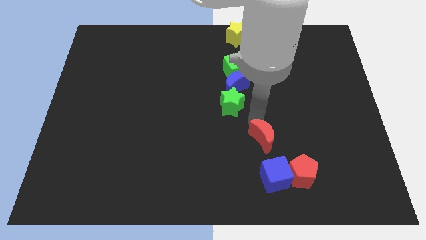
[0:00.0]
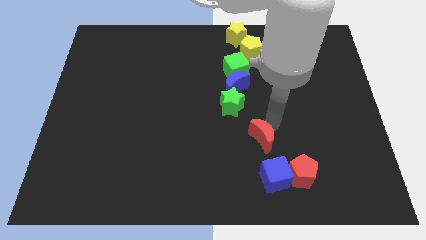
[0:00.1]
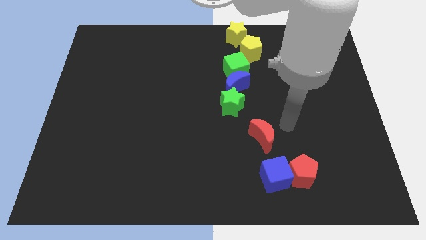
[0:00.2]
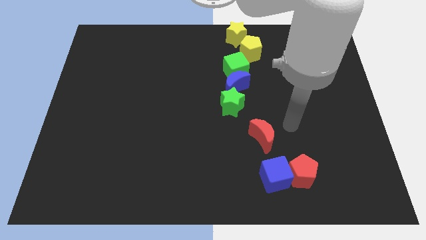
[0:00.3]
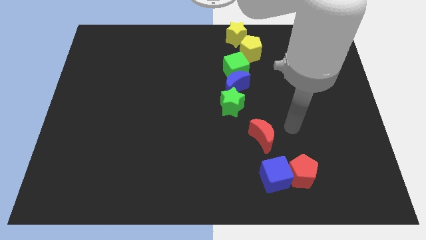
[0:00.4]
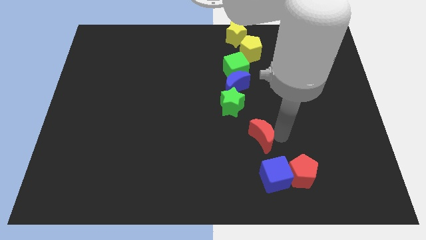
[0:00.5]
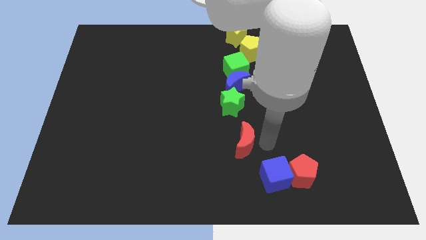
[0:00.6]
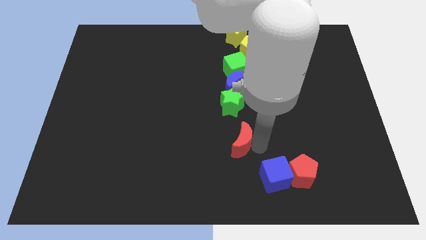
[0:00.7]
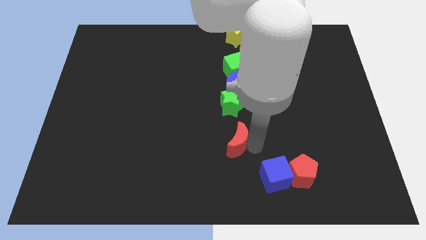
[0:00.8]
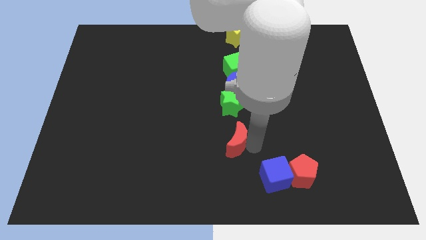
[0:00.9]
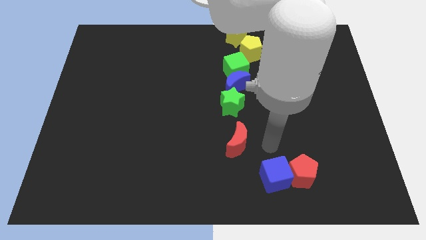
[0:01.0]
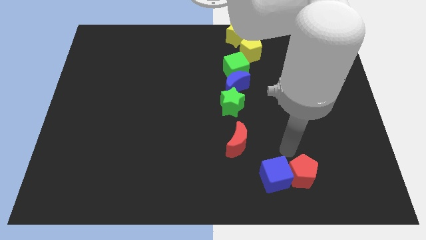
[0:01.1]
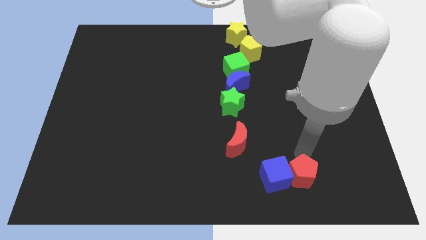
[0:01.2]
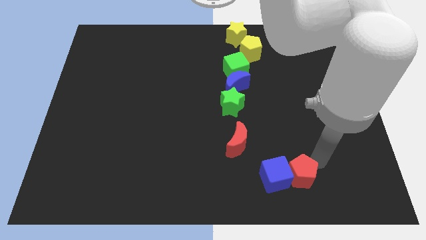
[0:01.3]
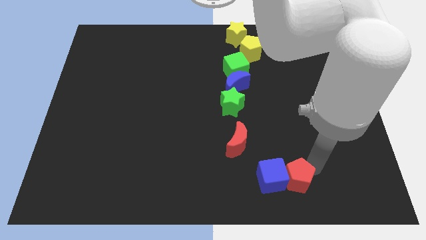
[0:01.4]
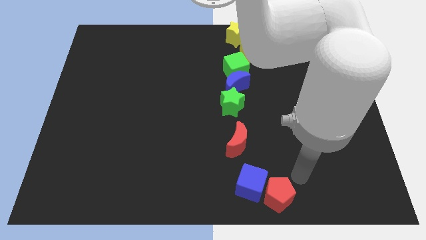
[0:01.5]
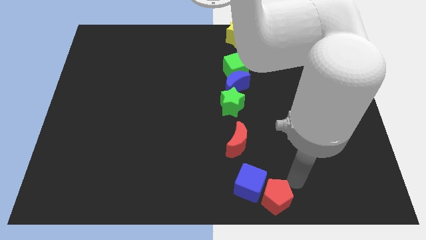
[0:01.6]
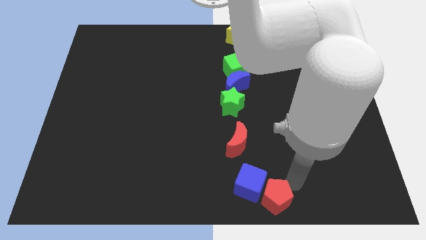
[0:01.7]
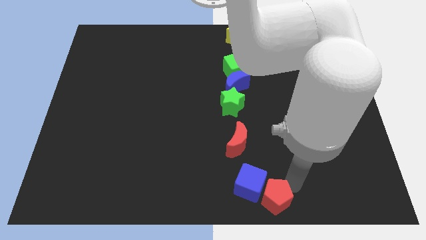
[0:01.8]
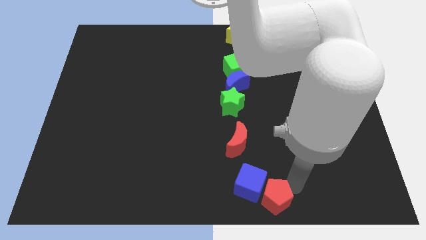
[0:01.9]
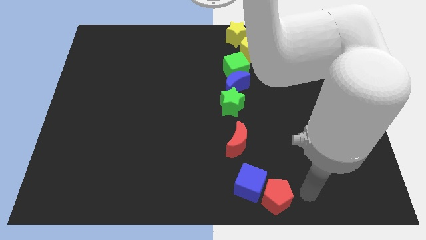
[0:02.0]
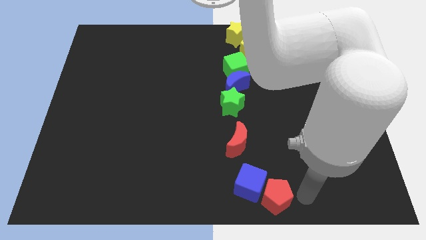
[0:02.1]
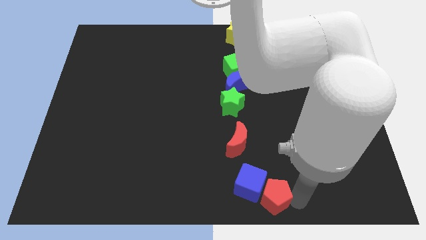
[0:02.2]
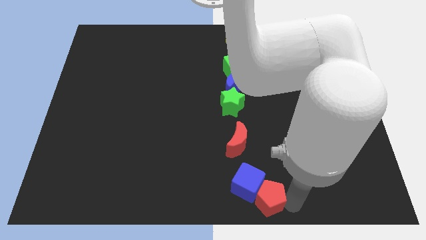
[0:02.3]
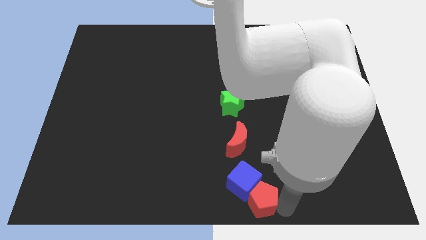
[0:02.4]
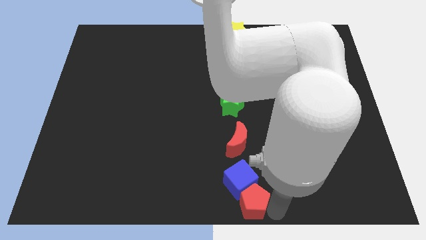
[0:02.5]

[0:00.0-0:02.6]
move red pentagon and blue cube slightly left

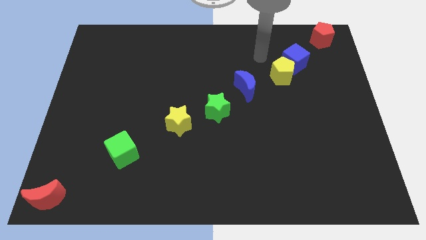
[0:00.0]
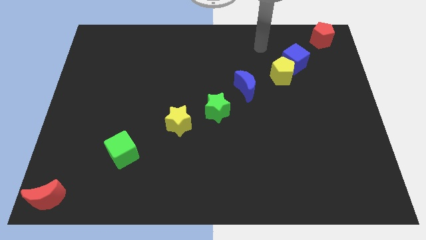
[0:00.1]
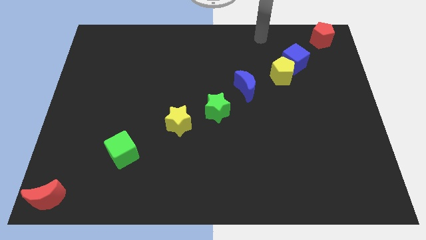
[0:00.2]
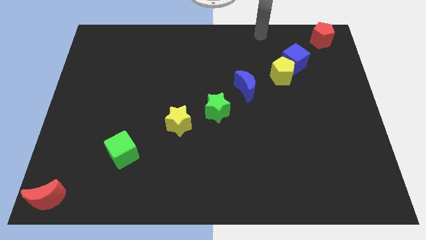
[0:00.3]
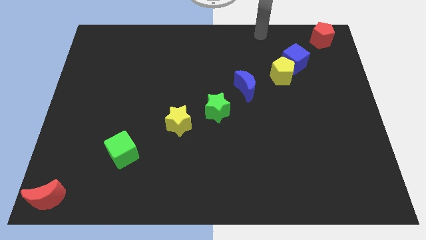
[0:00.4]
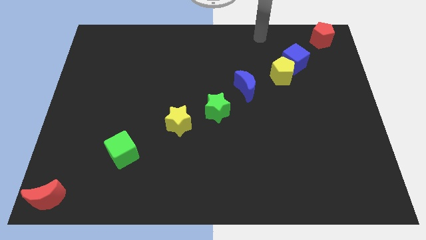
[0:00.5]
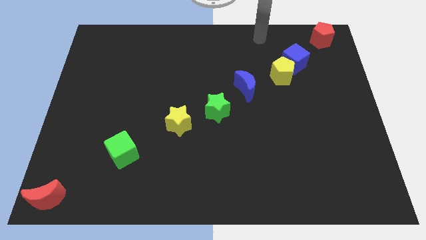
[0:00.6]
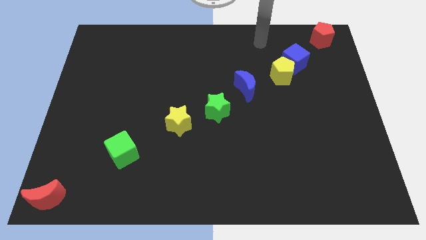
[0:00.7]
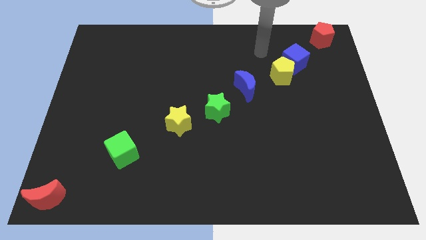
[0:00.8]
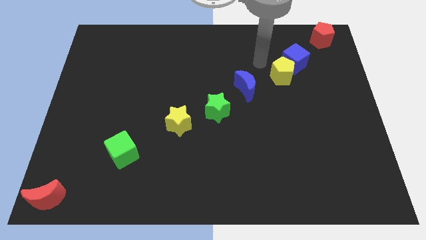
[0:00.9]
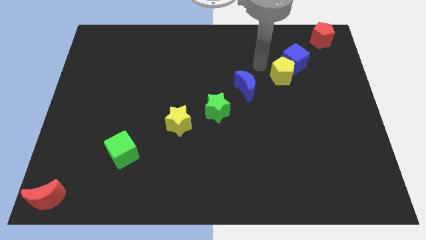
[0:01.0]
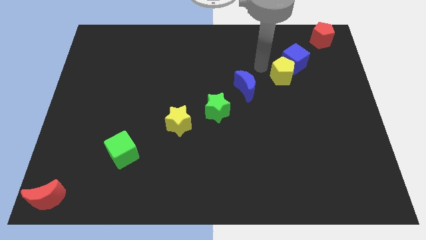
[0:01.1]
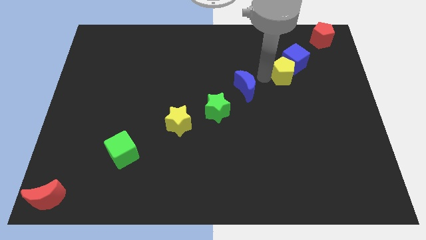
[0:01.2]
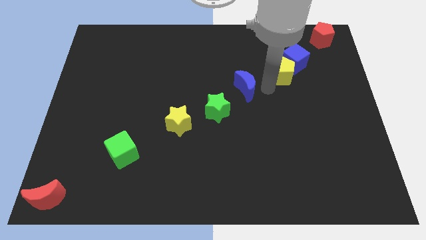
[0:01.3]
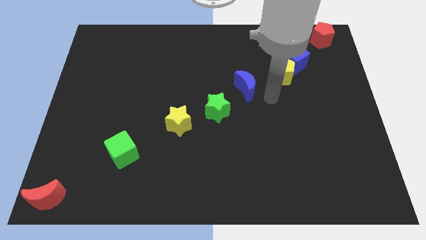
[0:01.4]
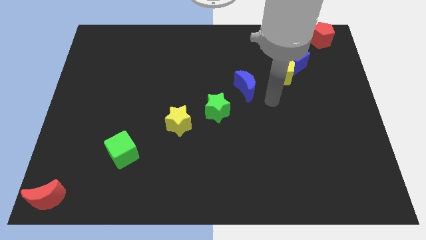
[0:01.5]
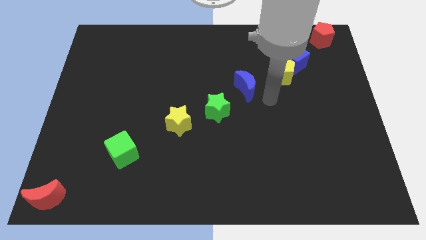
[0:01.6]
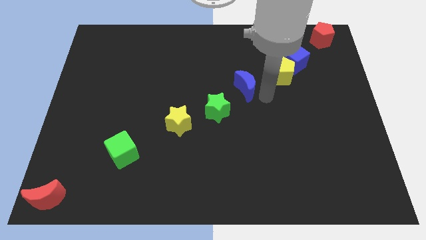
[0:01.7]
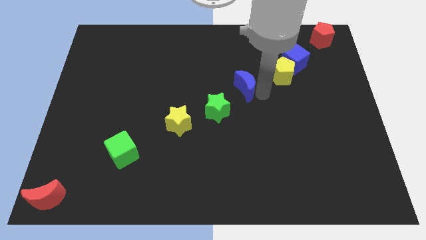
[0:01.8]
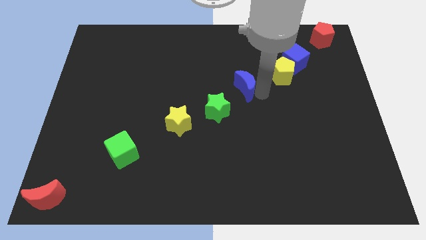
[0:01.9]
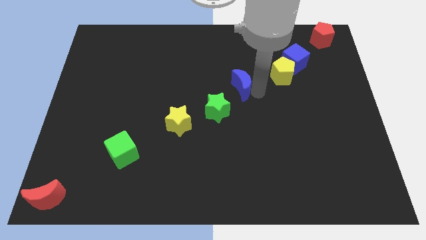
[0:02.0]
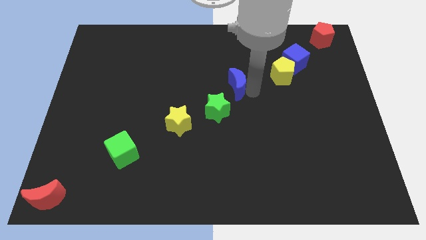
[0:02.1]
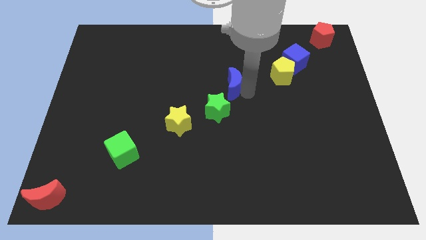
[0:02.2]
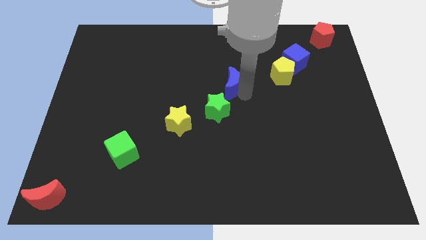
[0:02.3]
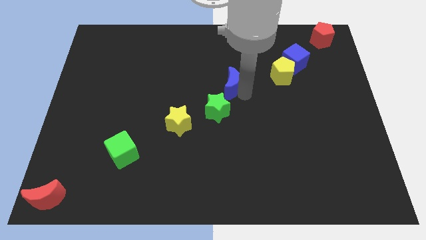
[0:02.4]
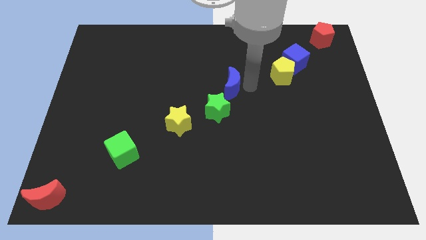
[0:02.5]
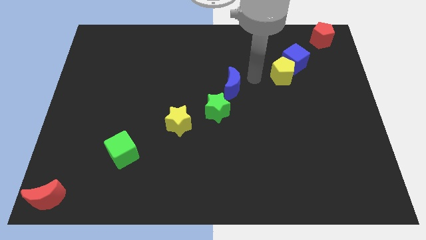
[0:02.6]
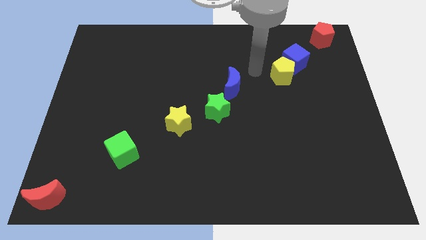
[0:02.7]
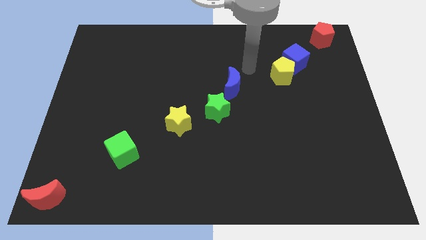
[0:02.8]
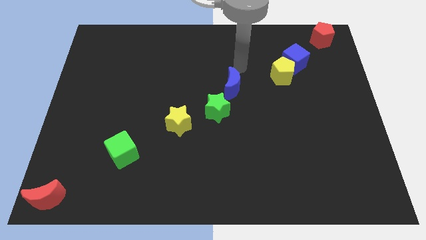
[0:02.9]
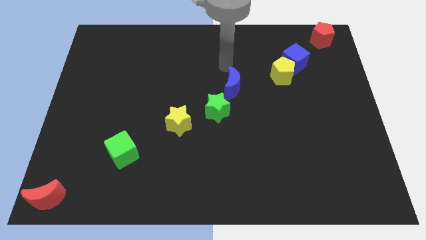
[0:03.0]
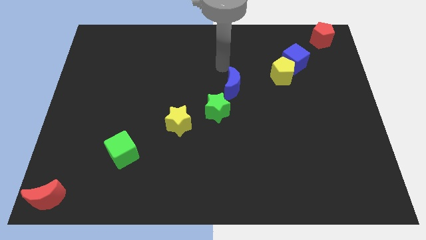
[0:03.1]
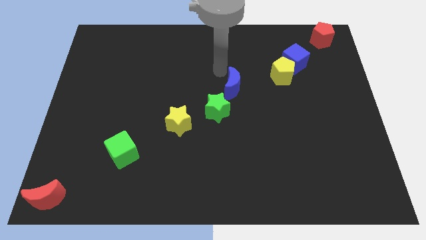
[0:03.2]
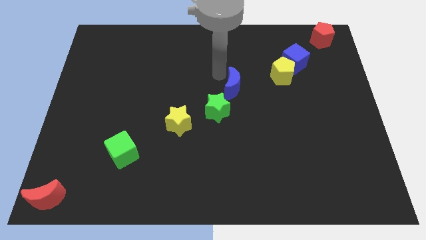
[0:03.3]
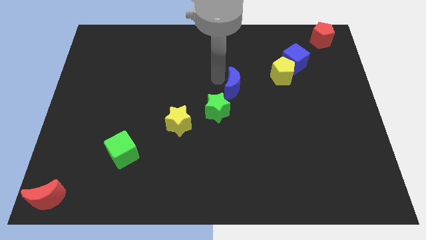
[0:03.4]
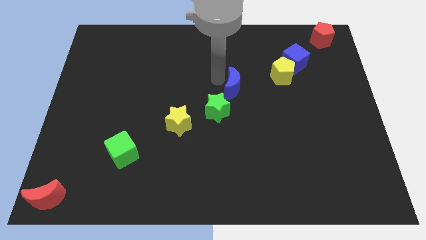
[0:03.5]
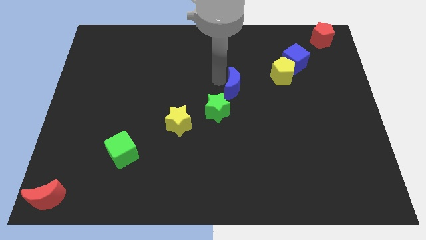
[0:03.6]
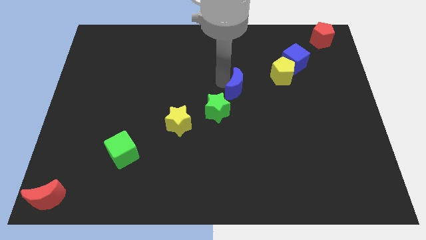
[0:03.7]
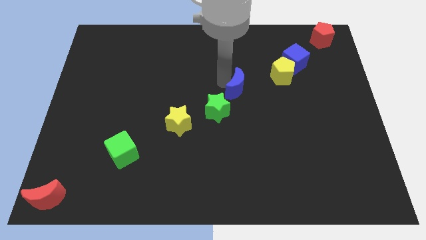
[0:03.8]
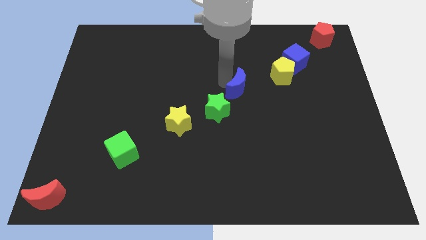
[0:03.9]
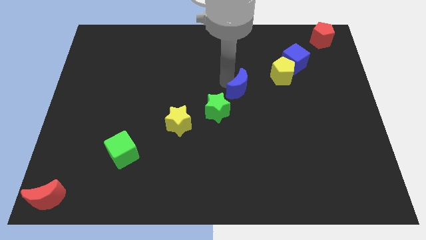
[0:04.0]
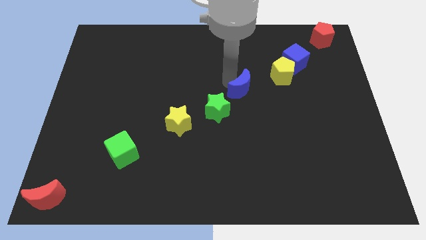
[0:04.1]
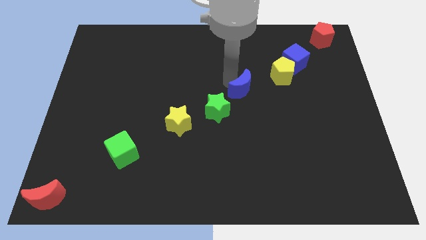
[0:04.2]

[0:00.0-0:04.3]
move the blue moon close to the green star

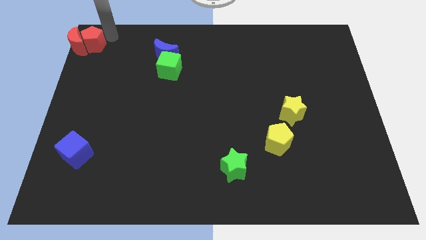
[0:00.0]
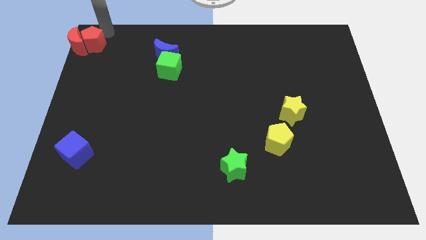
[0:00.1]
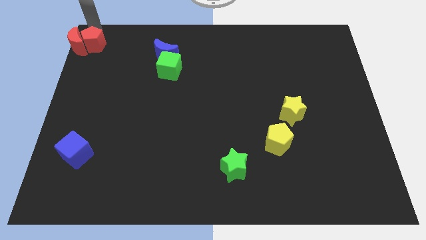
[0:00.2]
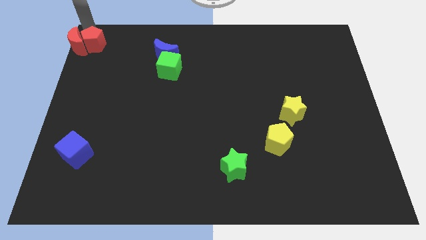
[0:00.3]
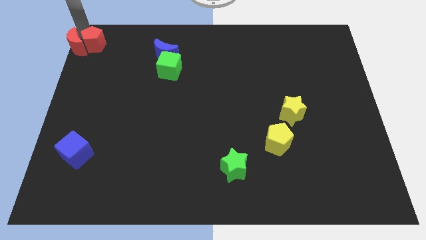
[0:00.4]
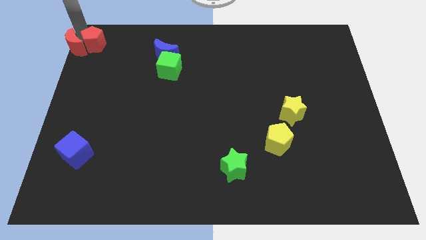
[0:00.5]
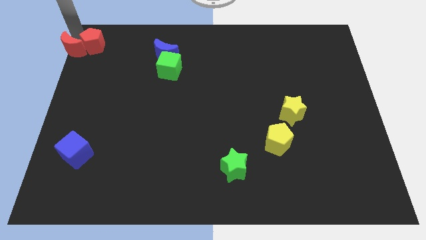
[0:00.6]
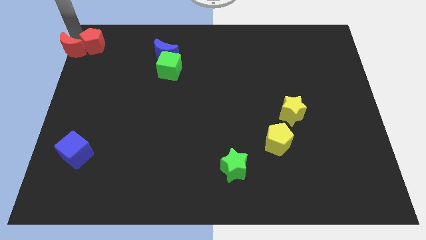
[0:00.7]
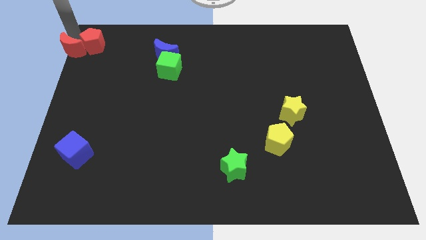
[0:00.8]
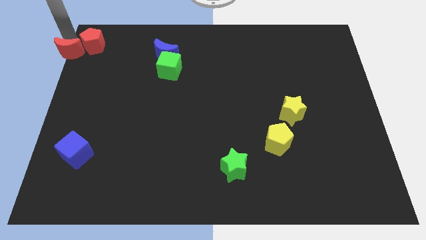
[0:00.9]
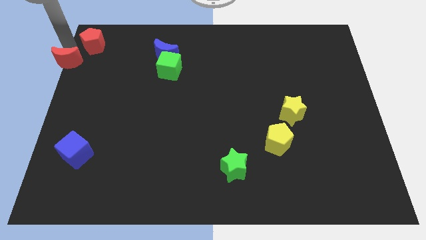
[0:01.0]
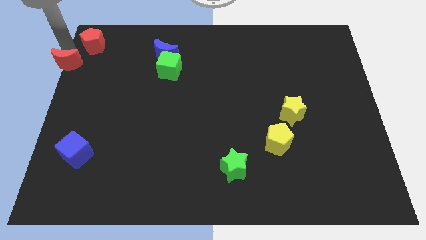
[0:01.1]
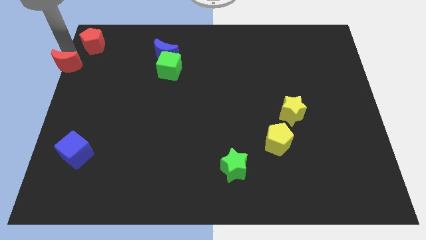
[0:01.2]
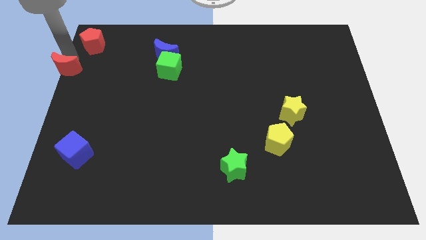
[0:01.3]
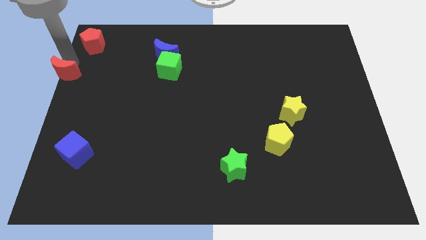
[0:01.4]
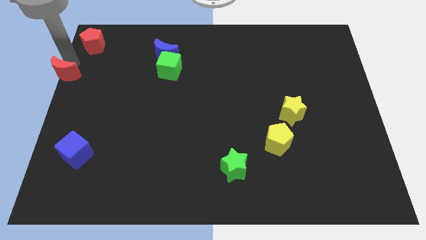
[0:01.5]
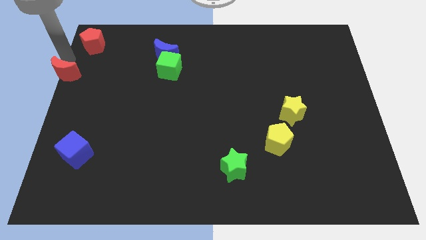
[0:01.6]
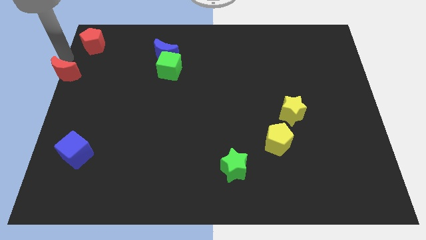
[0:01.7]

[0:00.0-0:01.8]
separate the red crescent from the red pentagon

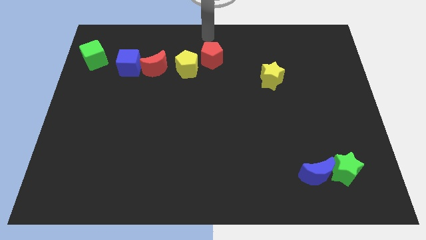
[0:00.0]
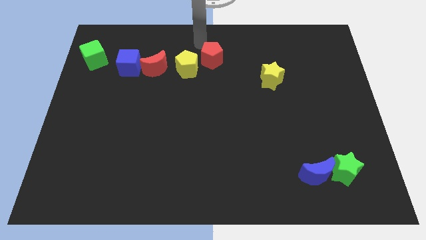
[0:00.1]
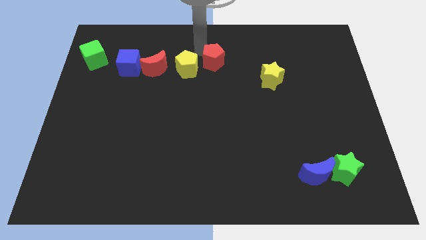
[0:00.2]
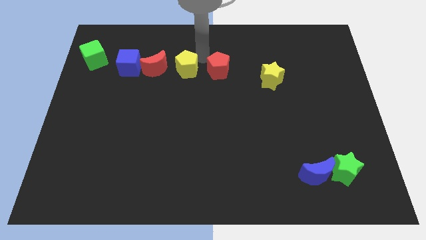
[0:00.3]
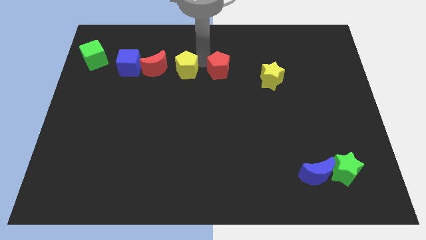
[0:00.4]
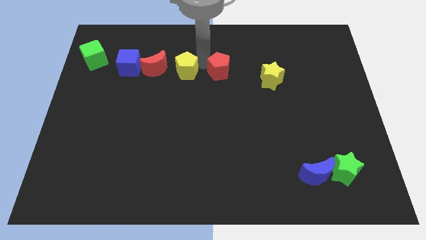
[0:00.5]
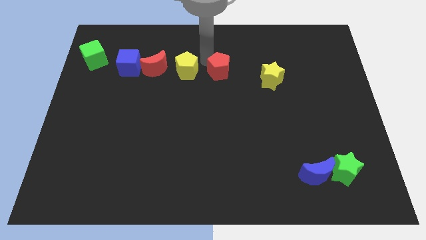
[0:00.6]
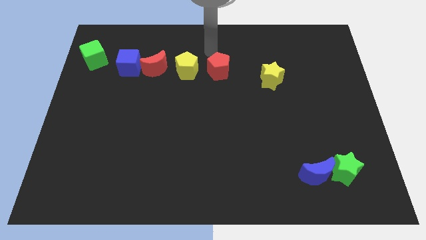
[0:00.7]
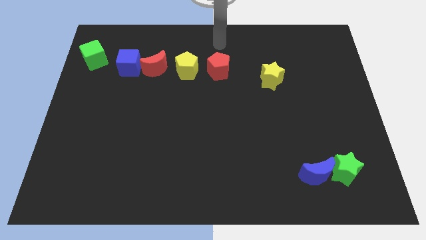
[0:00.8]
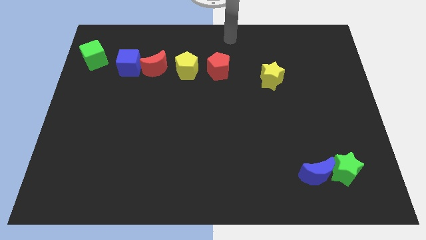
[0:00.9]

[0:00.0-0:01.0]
adjust the pentagons to form a line
